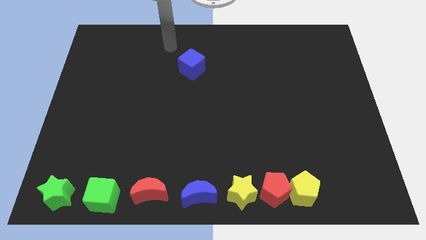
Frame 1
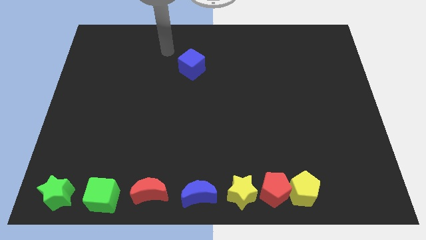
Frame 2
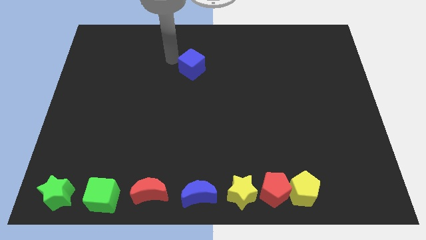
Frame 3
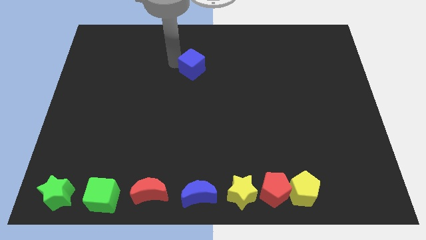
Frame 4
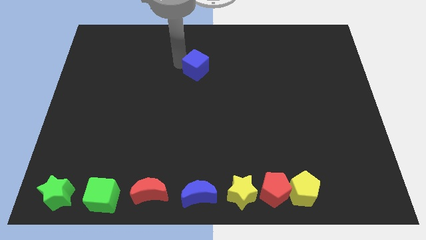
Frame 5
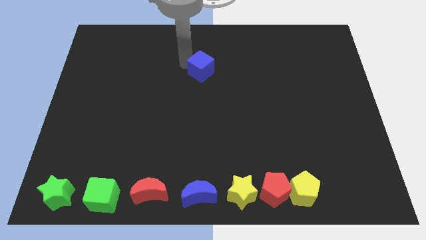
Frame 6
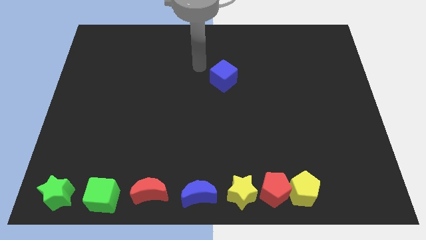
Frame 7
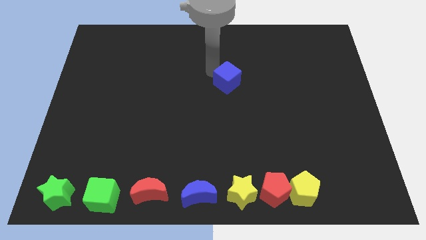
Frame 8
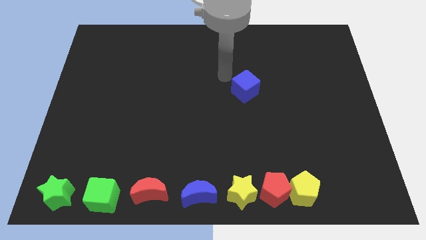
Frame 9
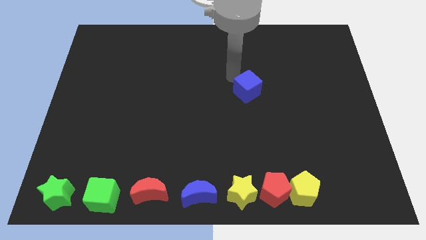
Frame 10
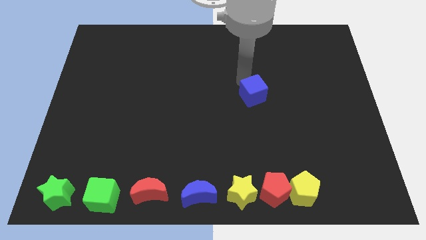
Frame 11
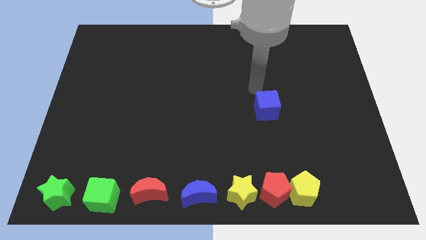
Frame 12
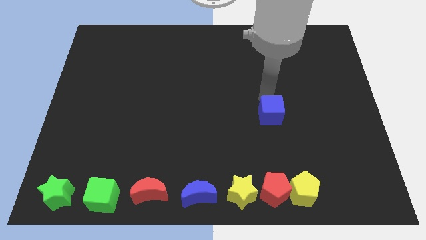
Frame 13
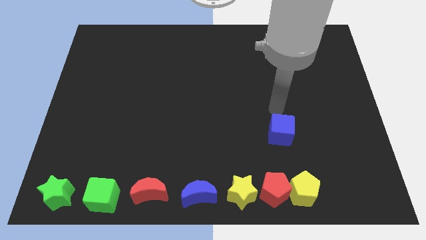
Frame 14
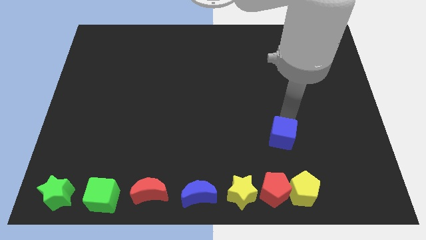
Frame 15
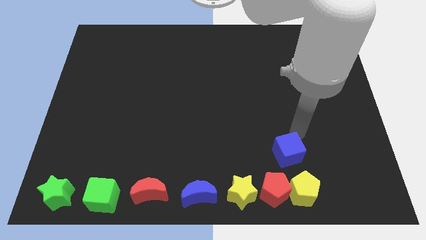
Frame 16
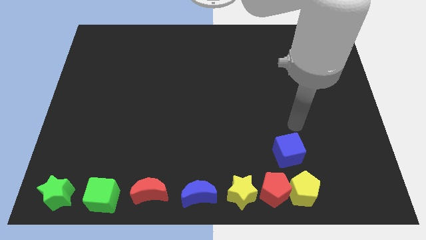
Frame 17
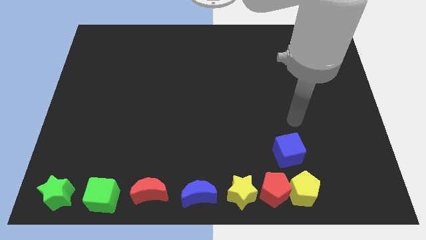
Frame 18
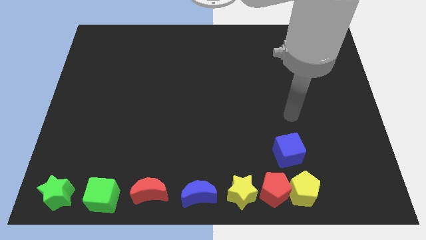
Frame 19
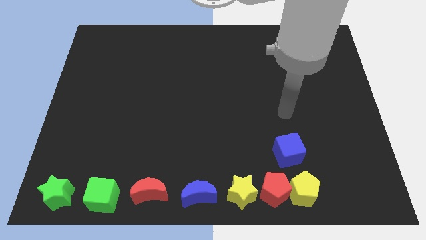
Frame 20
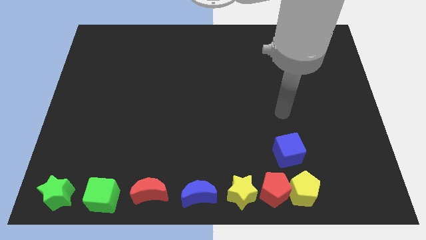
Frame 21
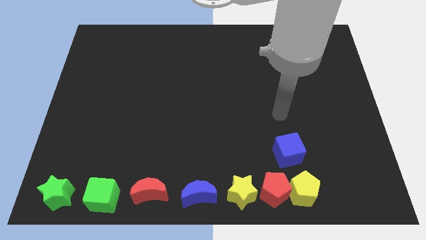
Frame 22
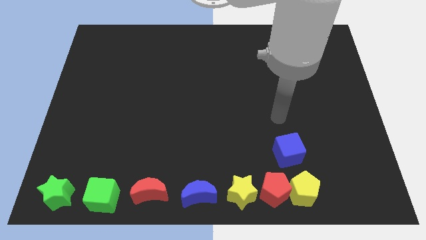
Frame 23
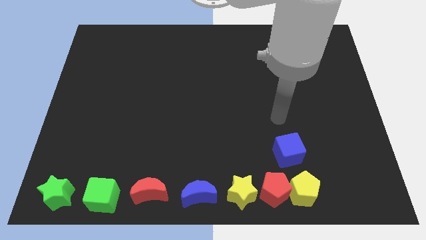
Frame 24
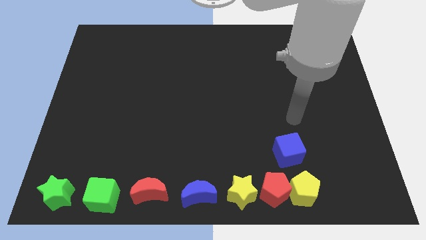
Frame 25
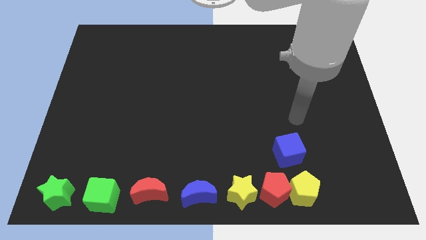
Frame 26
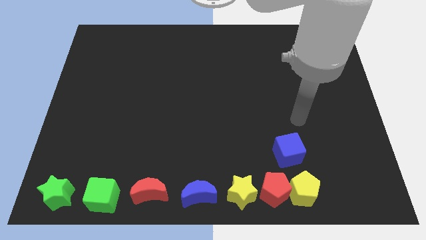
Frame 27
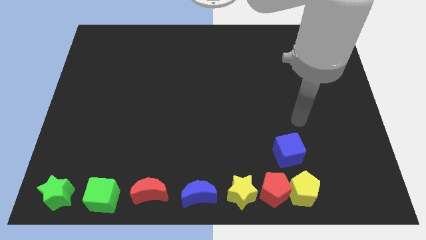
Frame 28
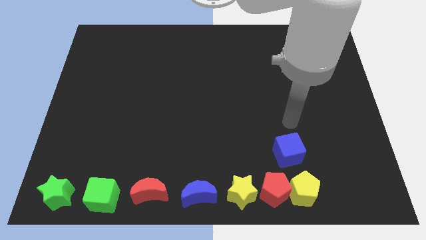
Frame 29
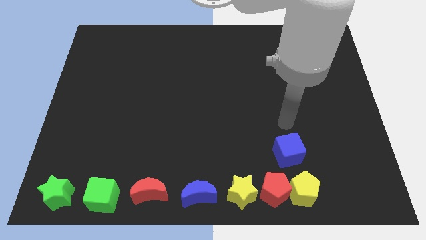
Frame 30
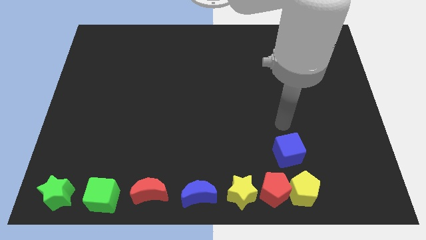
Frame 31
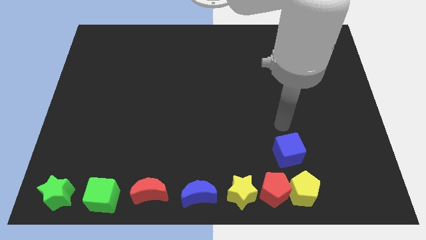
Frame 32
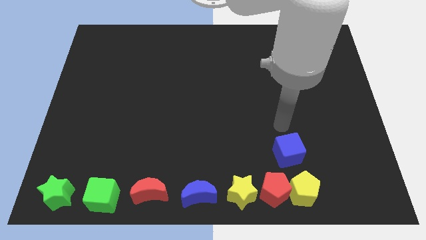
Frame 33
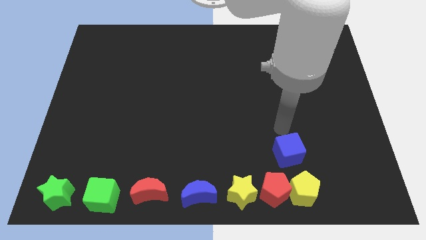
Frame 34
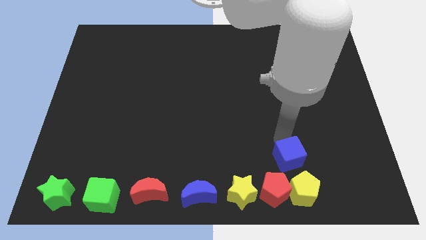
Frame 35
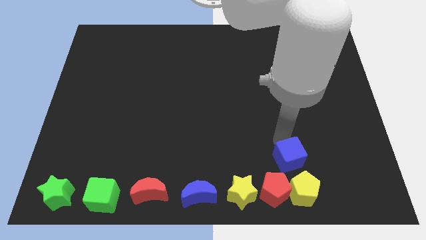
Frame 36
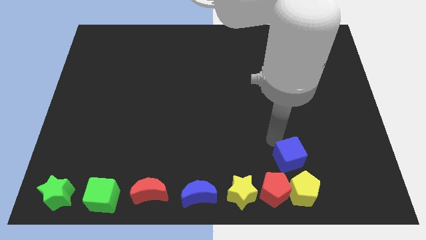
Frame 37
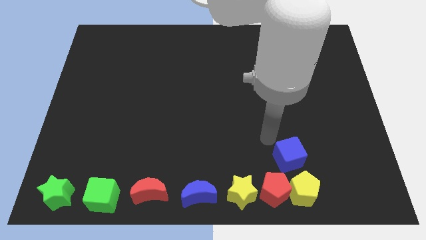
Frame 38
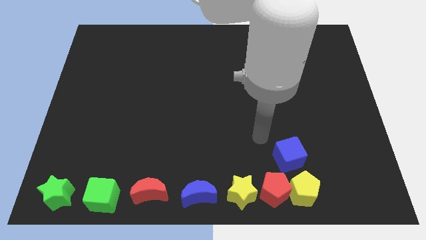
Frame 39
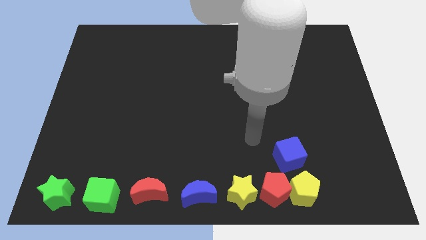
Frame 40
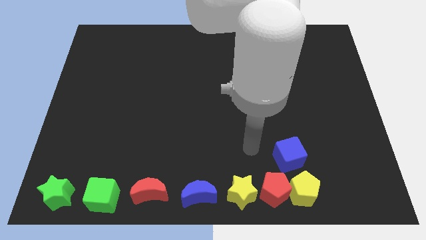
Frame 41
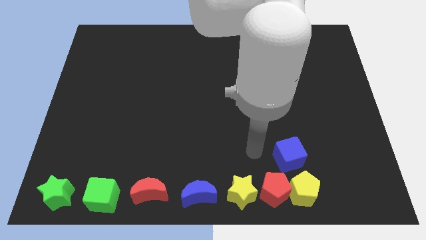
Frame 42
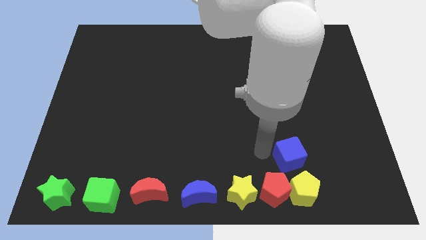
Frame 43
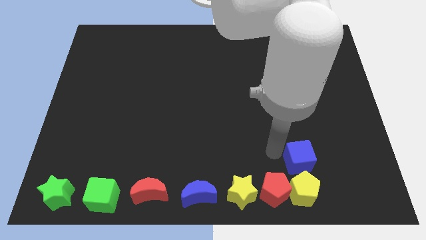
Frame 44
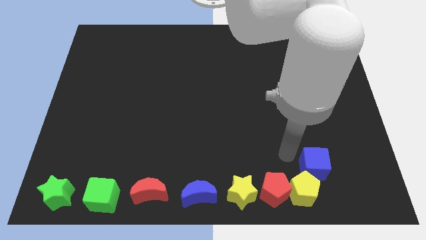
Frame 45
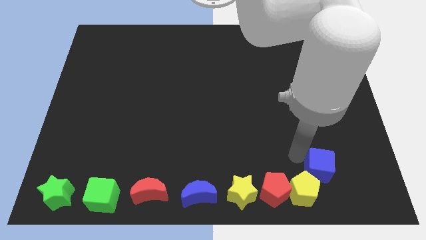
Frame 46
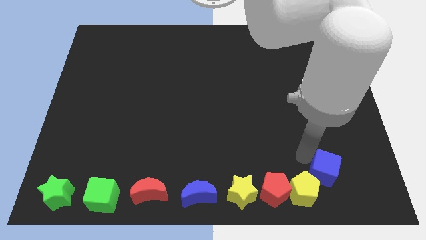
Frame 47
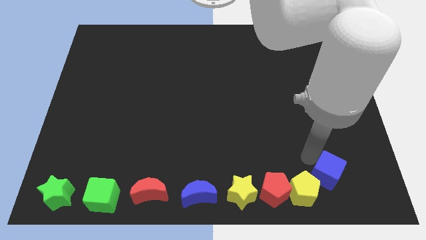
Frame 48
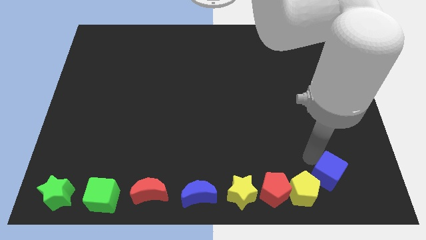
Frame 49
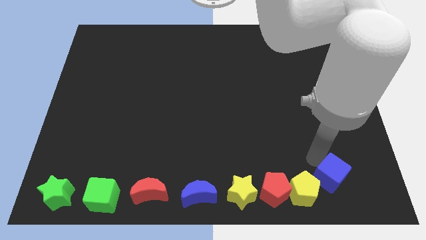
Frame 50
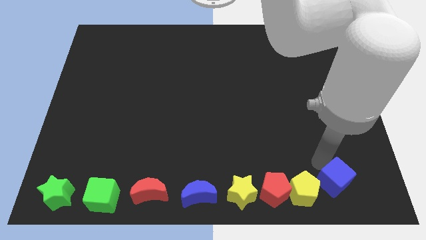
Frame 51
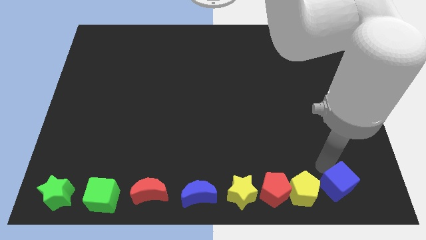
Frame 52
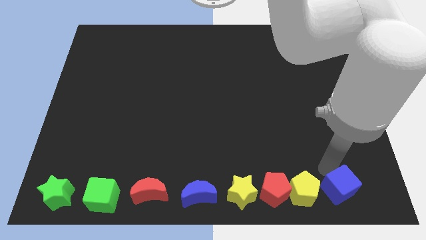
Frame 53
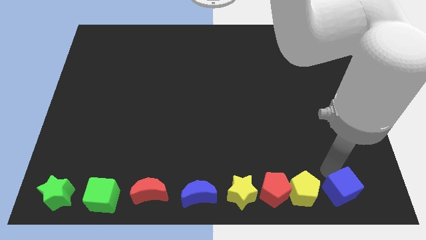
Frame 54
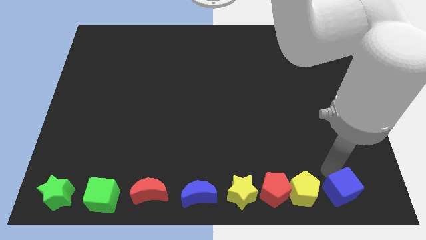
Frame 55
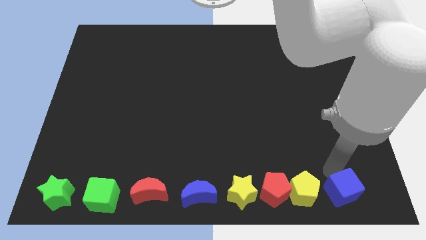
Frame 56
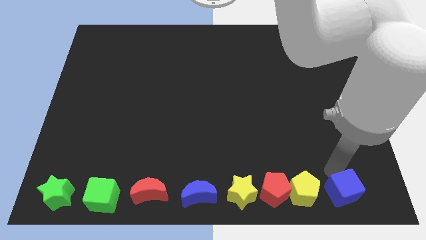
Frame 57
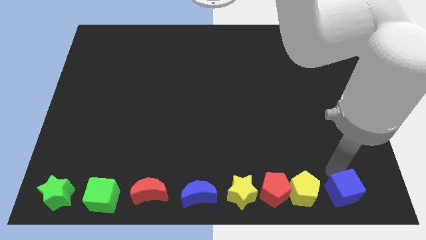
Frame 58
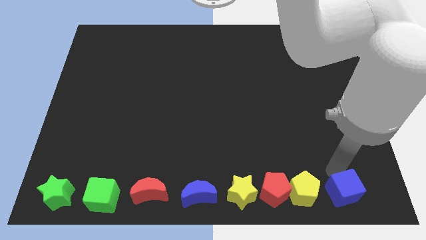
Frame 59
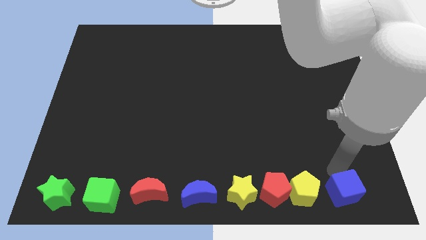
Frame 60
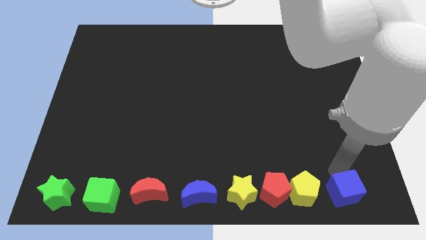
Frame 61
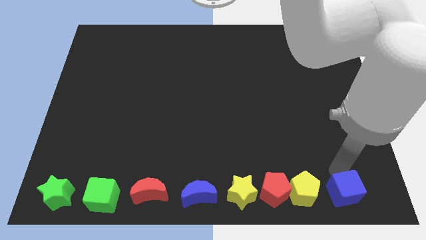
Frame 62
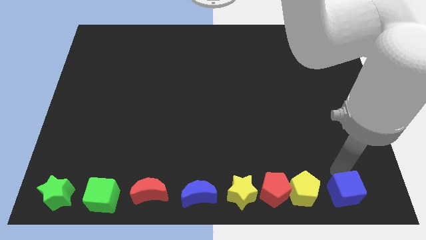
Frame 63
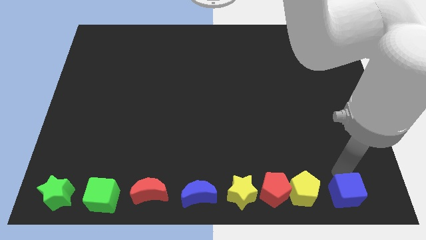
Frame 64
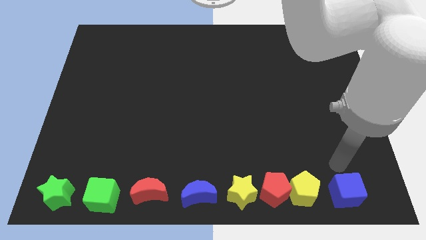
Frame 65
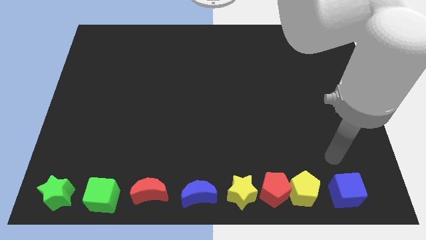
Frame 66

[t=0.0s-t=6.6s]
move the blue cube to the bottom right in a row

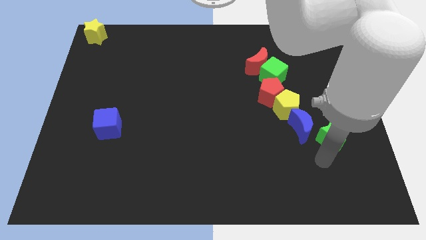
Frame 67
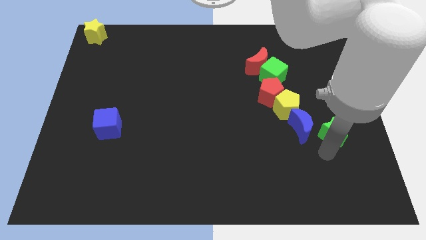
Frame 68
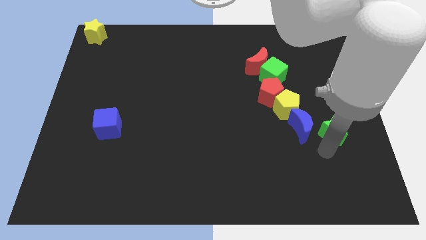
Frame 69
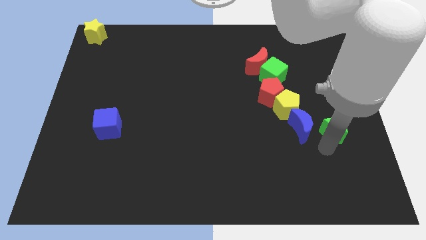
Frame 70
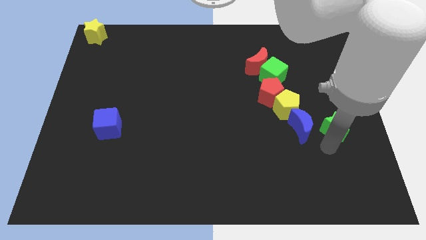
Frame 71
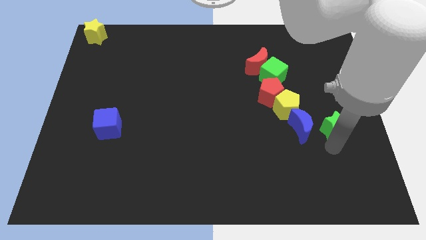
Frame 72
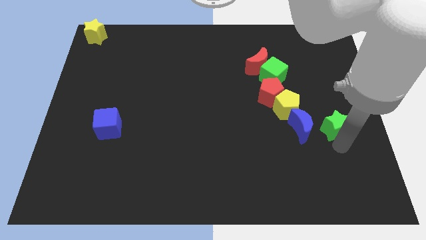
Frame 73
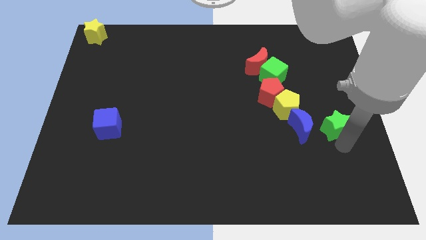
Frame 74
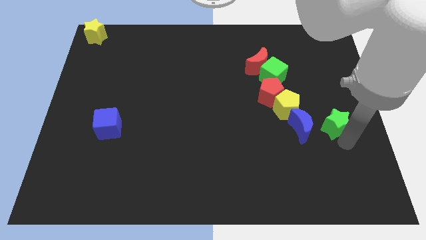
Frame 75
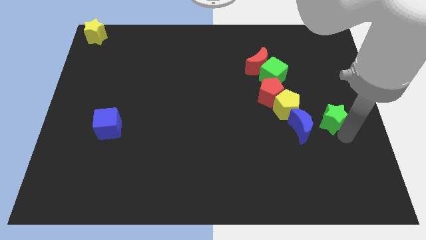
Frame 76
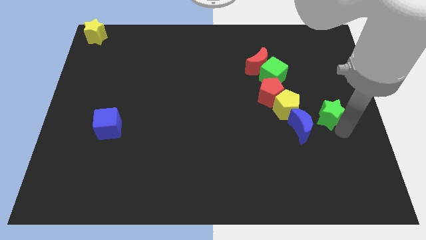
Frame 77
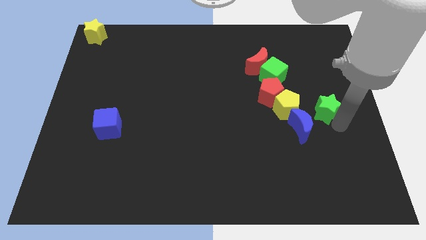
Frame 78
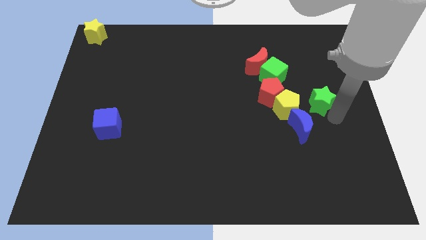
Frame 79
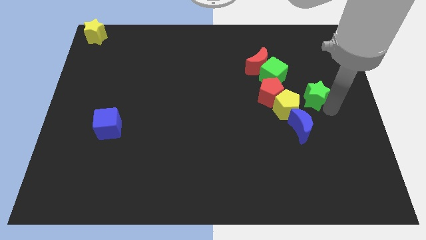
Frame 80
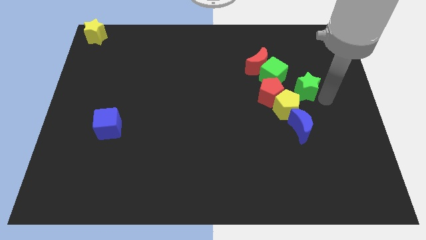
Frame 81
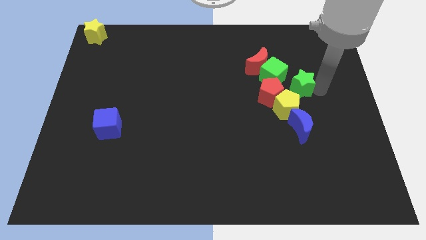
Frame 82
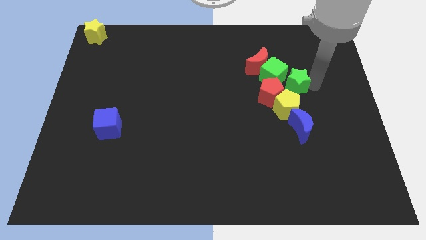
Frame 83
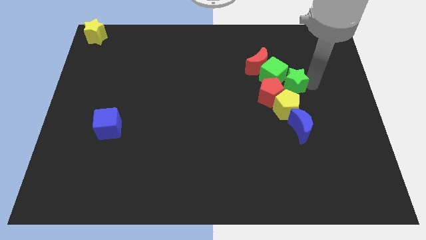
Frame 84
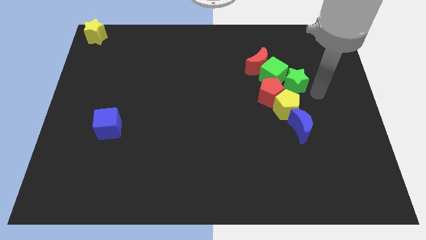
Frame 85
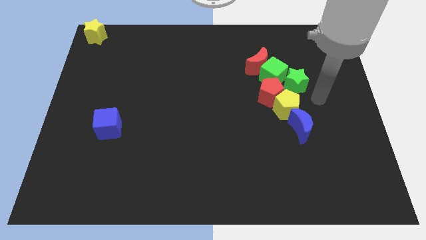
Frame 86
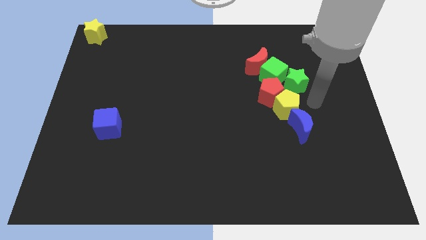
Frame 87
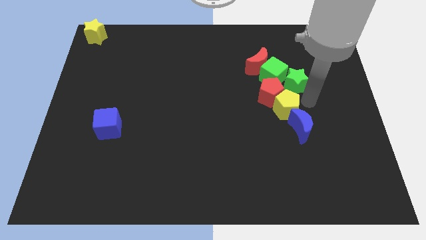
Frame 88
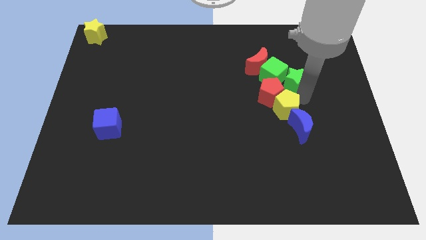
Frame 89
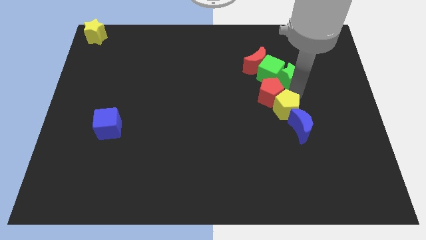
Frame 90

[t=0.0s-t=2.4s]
move the green star into the green cube
